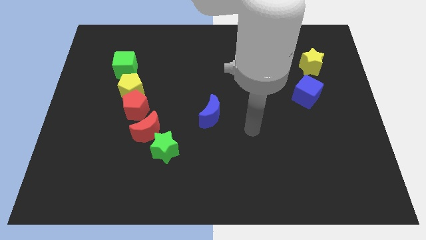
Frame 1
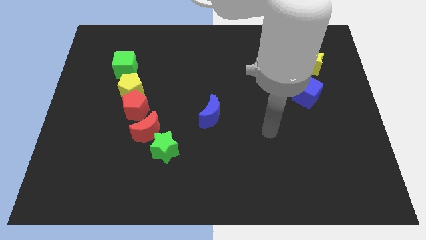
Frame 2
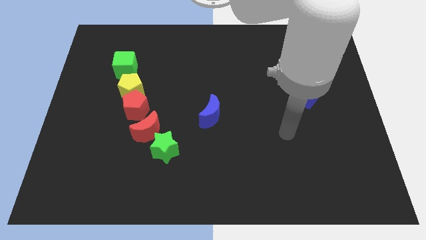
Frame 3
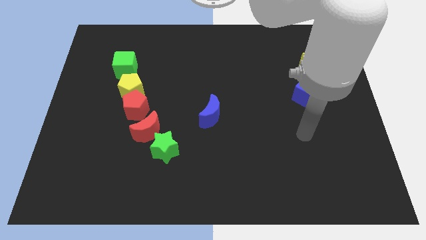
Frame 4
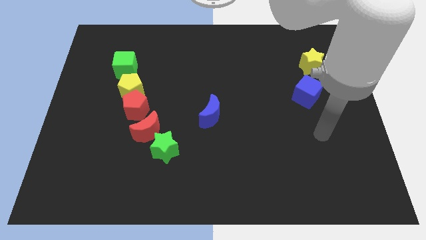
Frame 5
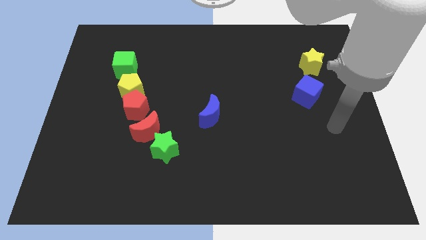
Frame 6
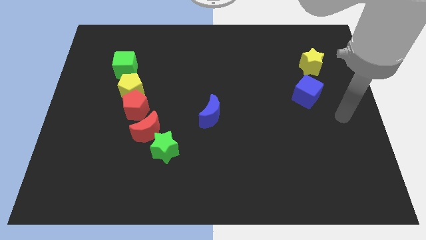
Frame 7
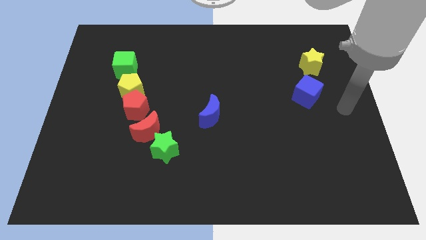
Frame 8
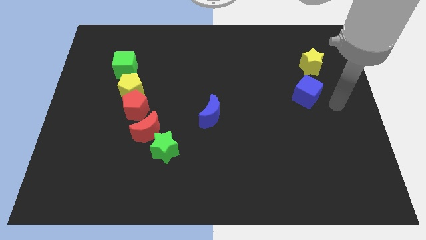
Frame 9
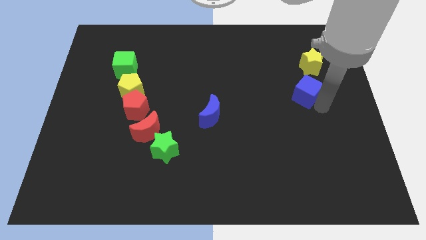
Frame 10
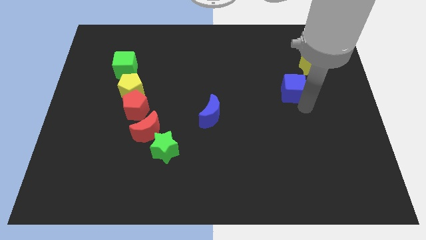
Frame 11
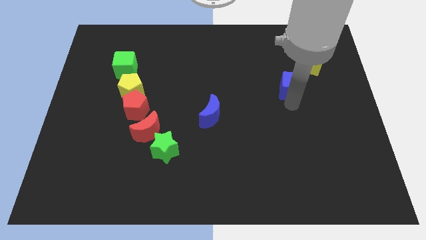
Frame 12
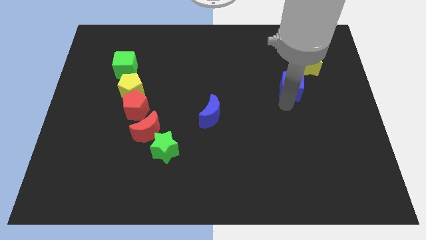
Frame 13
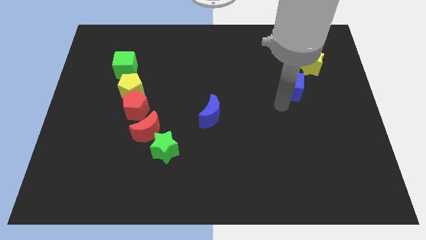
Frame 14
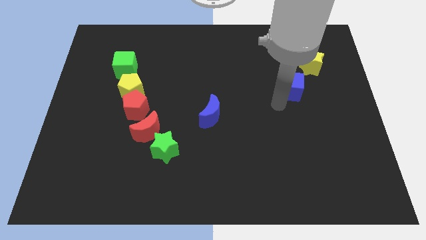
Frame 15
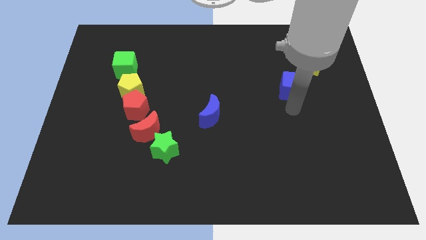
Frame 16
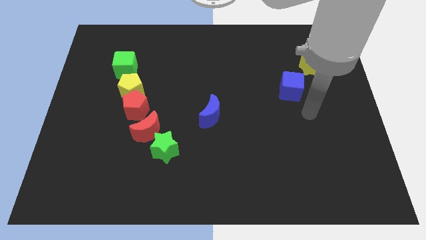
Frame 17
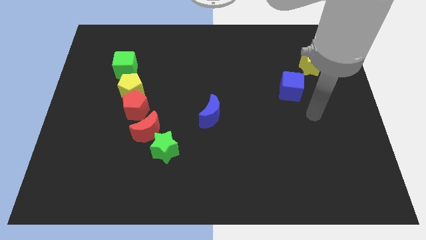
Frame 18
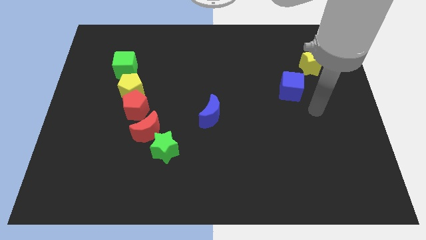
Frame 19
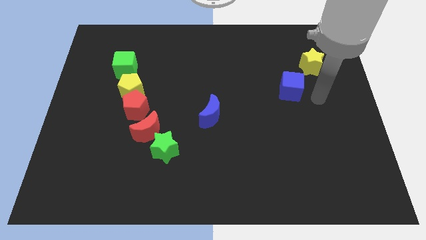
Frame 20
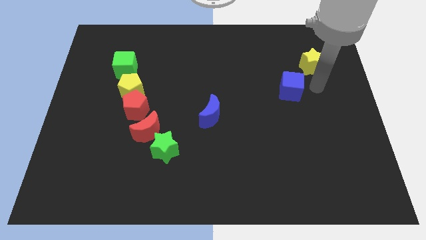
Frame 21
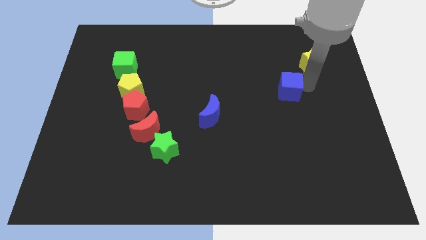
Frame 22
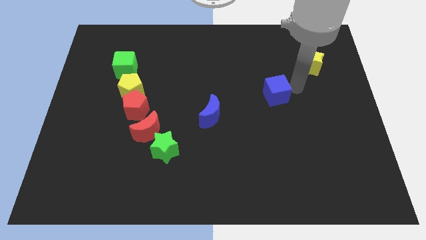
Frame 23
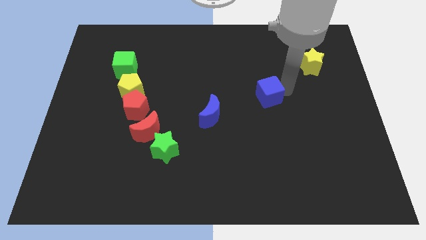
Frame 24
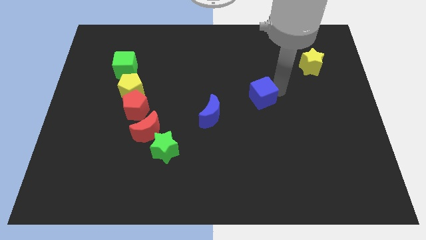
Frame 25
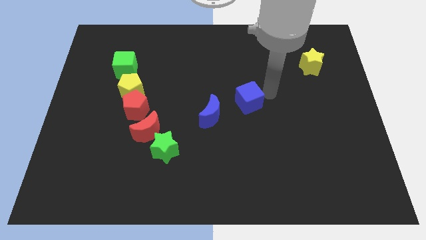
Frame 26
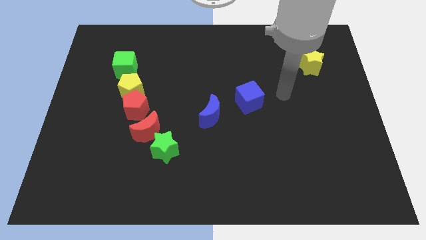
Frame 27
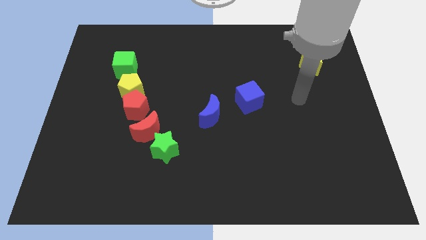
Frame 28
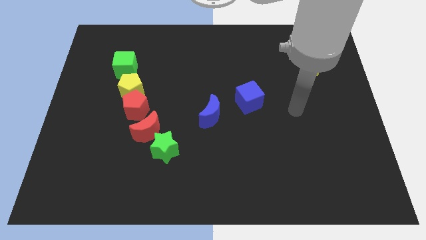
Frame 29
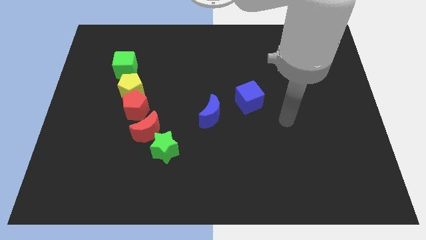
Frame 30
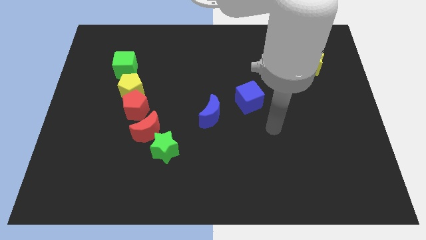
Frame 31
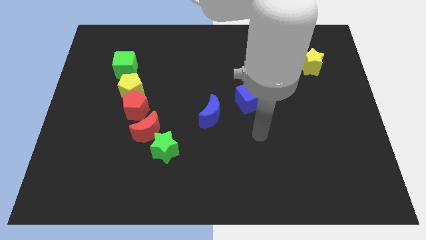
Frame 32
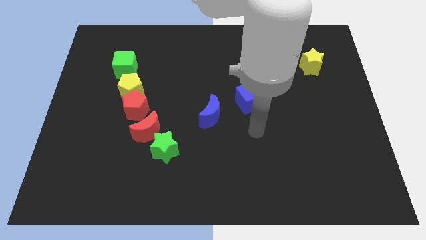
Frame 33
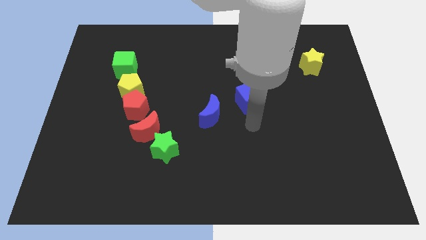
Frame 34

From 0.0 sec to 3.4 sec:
move the blue cube to the right of the blue crescent

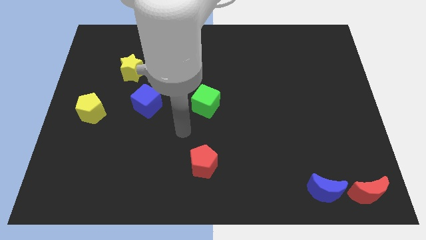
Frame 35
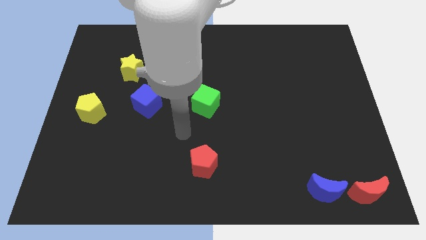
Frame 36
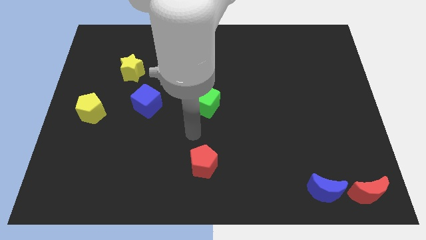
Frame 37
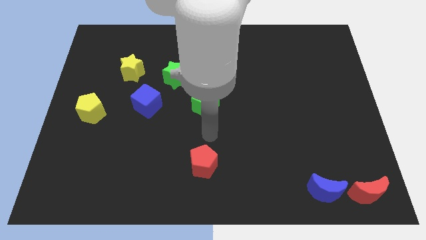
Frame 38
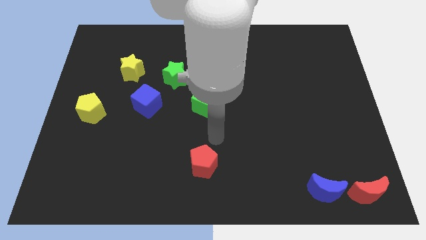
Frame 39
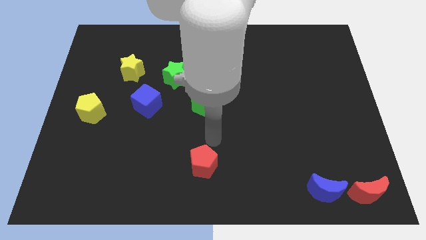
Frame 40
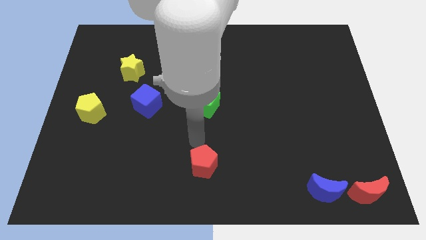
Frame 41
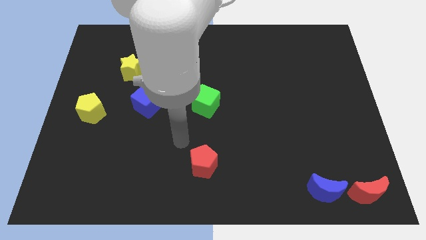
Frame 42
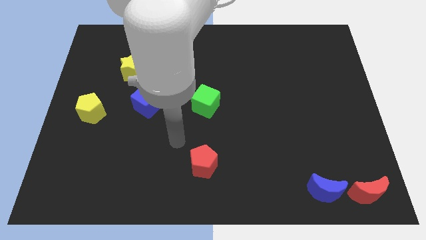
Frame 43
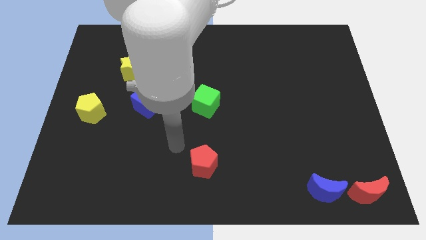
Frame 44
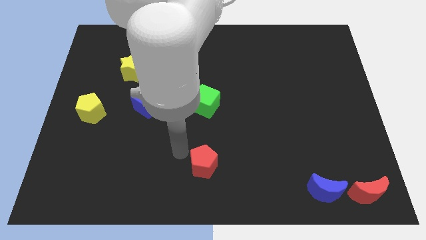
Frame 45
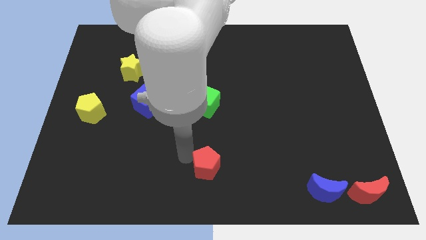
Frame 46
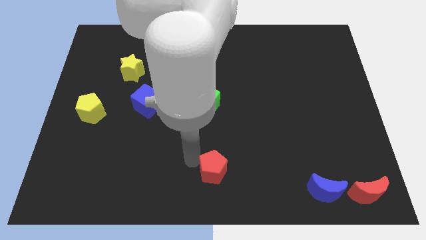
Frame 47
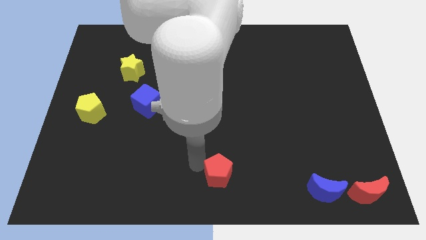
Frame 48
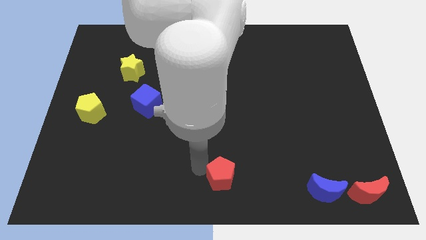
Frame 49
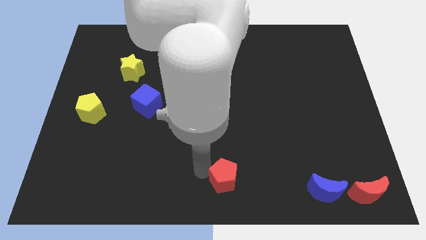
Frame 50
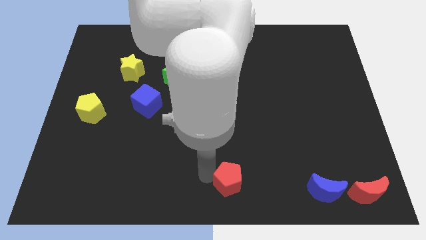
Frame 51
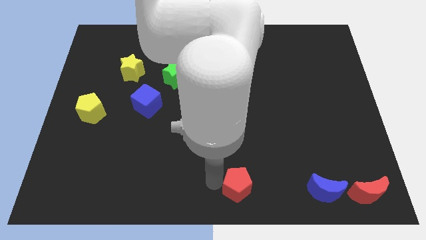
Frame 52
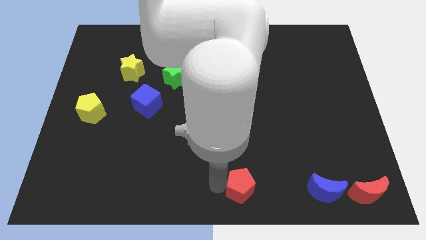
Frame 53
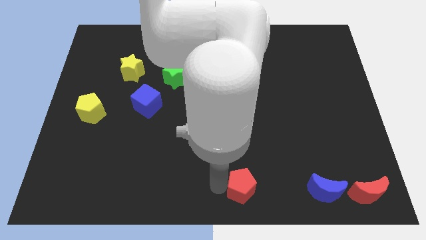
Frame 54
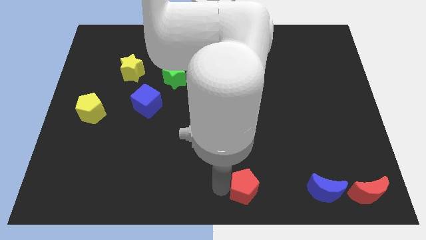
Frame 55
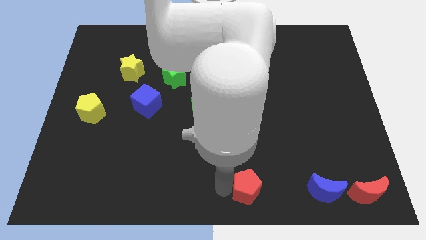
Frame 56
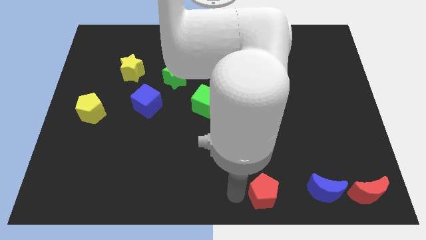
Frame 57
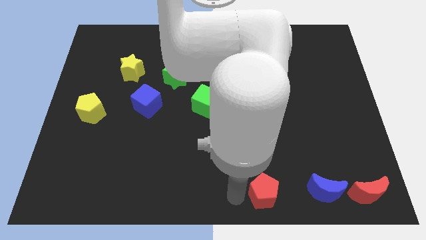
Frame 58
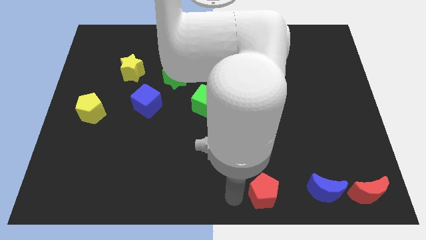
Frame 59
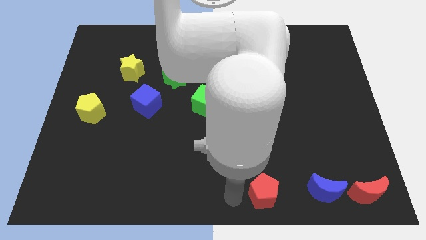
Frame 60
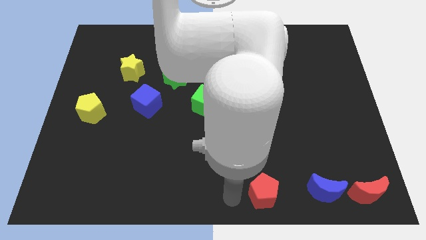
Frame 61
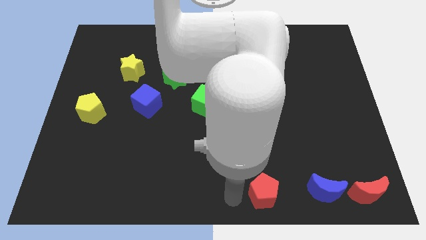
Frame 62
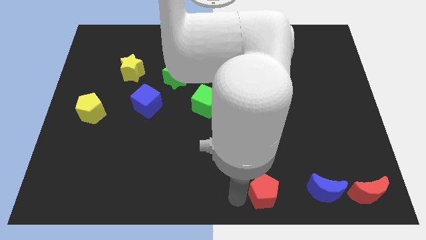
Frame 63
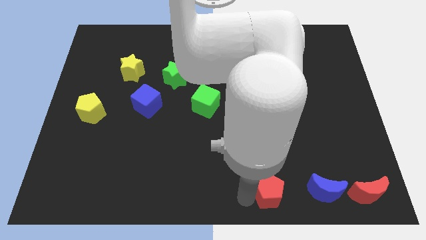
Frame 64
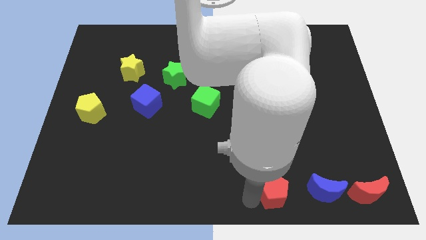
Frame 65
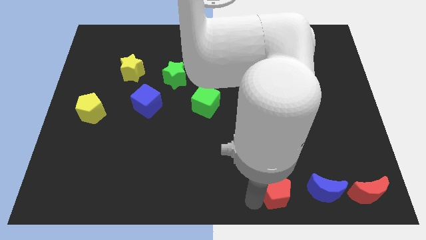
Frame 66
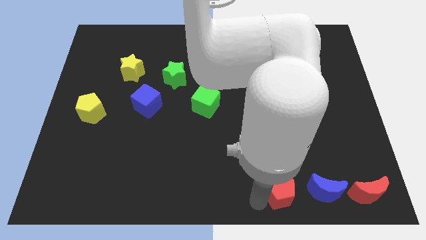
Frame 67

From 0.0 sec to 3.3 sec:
push the red pentagon towards the bottom right corner of the board

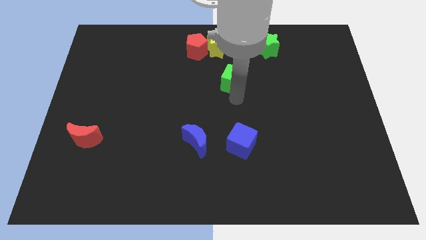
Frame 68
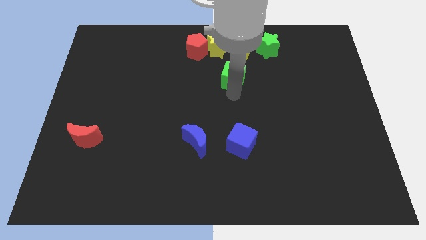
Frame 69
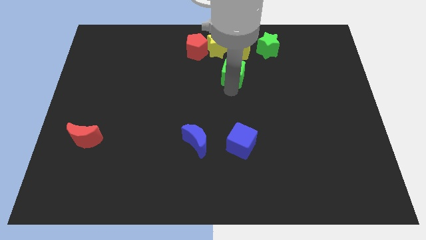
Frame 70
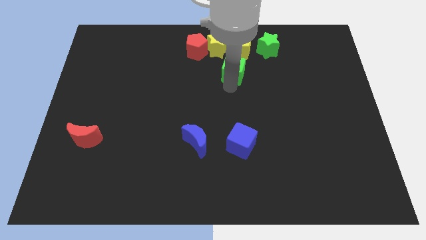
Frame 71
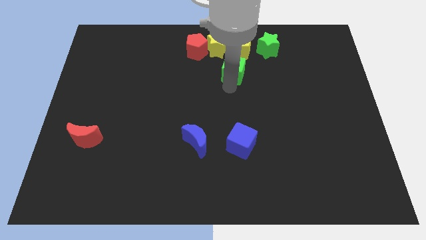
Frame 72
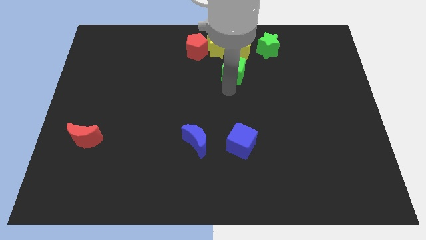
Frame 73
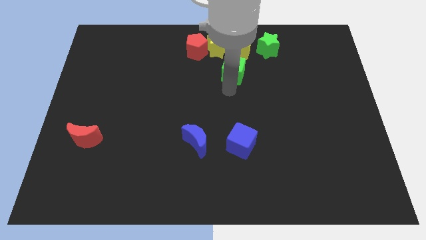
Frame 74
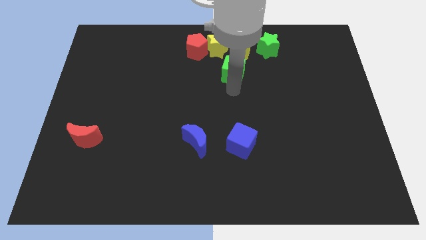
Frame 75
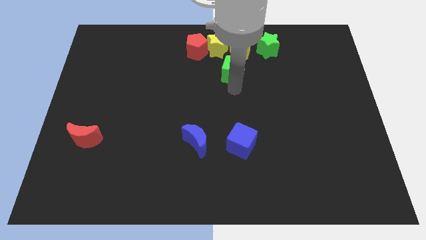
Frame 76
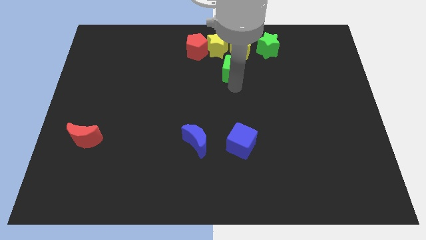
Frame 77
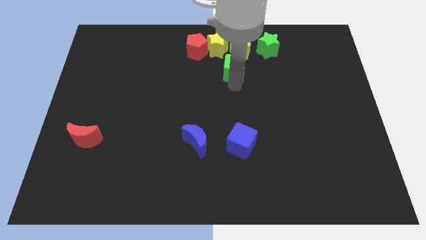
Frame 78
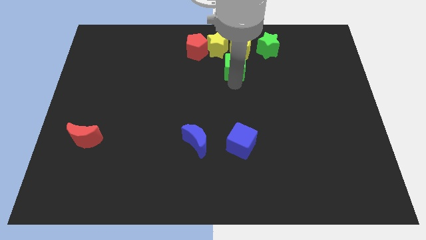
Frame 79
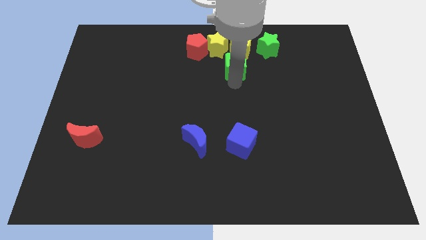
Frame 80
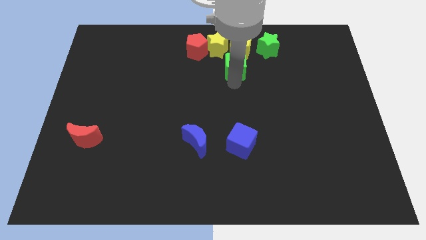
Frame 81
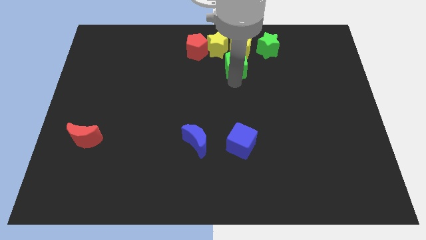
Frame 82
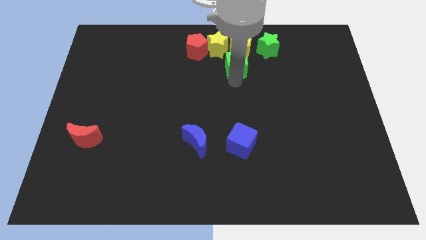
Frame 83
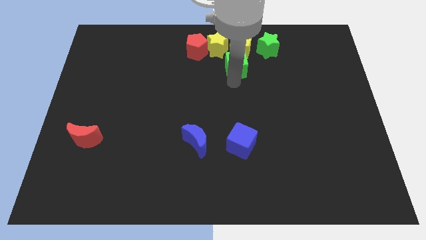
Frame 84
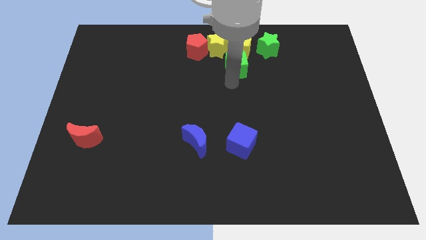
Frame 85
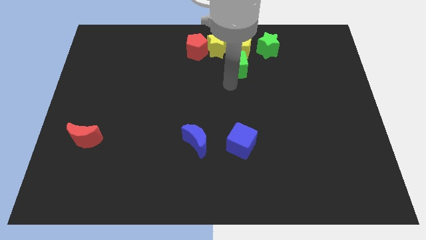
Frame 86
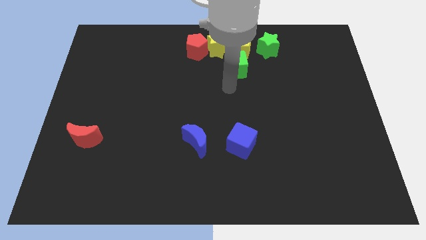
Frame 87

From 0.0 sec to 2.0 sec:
move the green cube to the bottom of the yellow pentagon

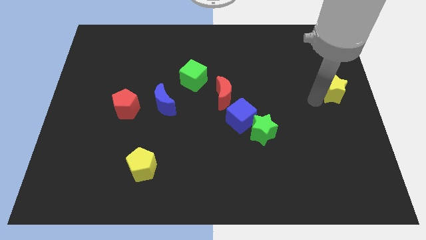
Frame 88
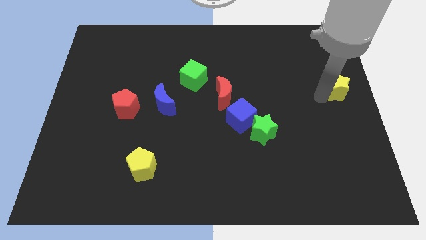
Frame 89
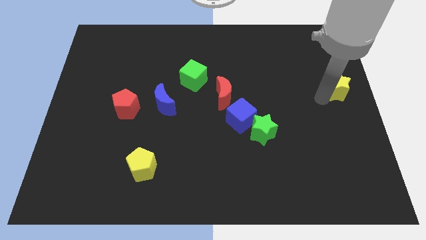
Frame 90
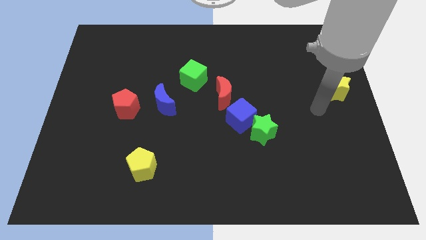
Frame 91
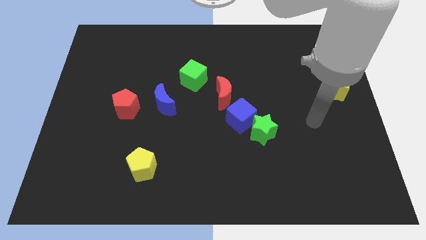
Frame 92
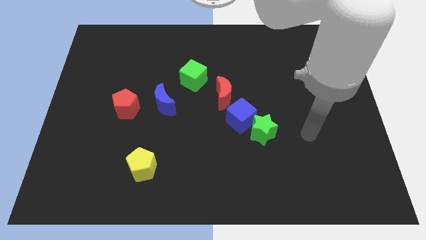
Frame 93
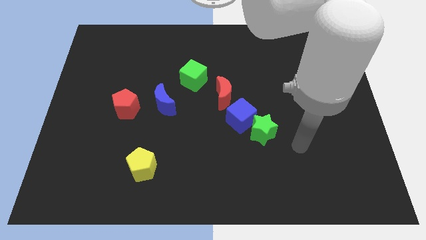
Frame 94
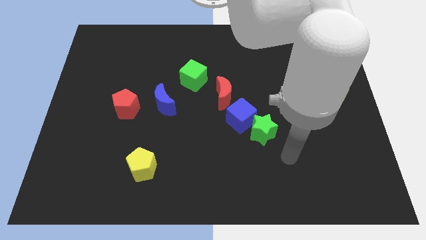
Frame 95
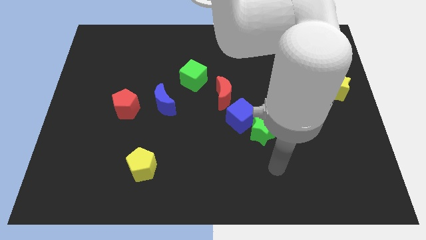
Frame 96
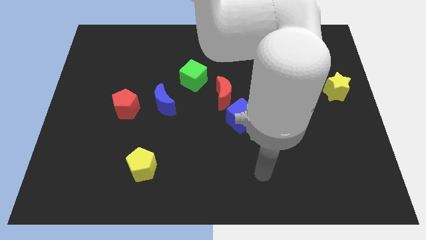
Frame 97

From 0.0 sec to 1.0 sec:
move your arm below the green star
